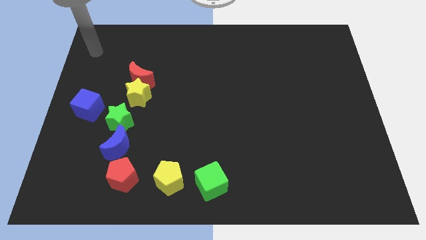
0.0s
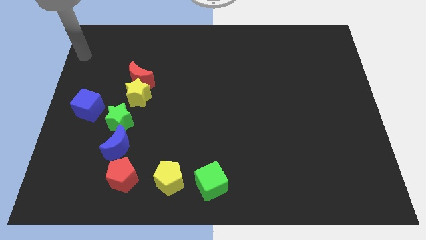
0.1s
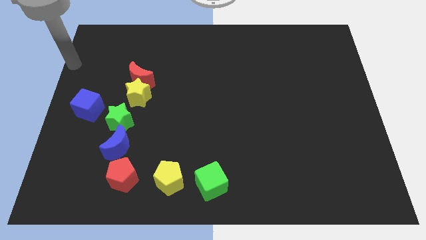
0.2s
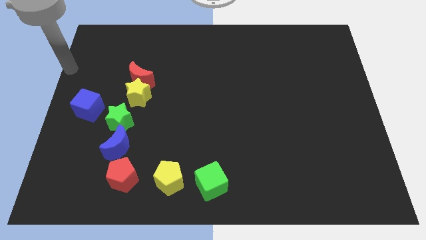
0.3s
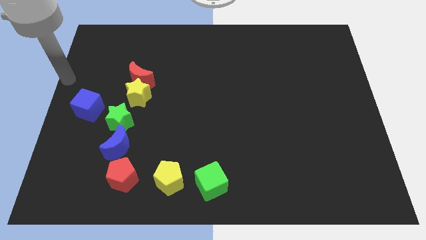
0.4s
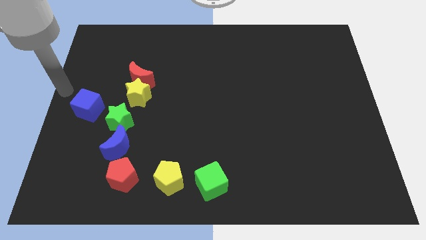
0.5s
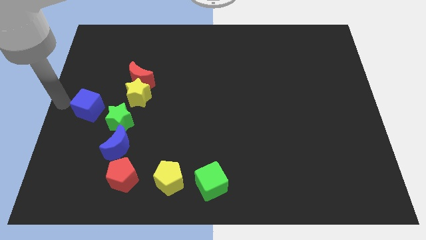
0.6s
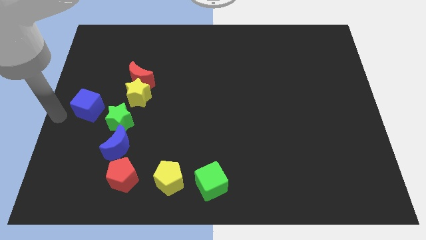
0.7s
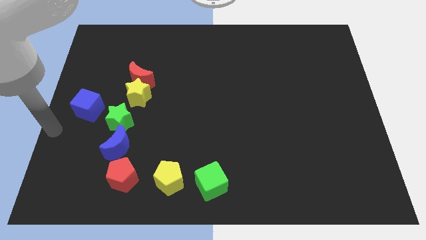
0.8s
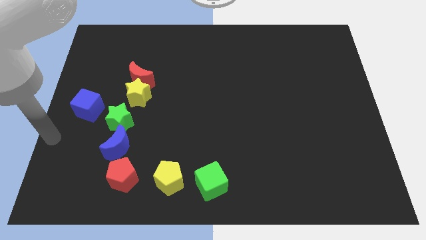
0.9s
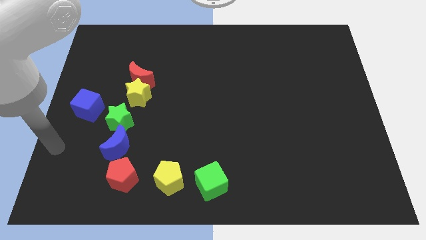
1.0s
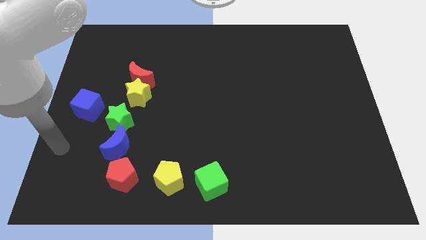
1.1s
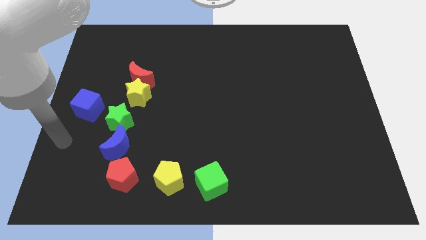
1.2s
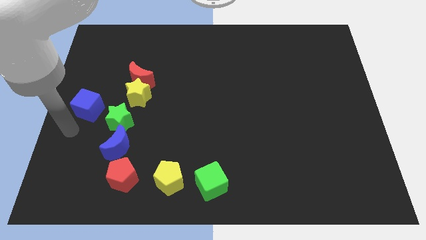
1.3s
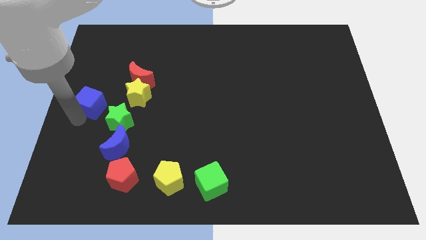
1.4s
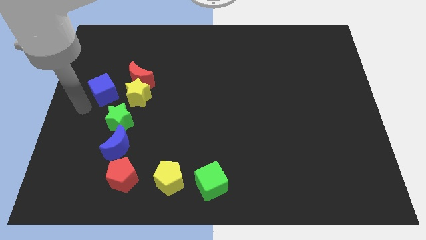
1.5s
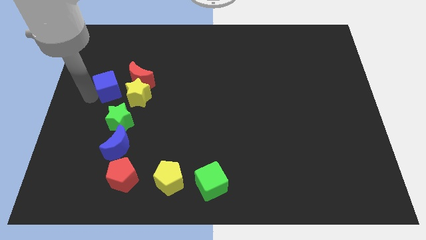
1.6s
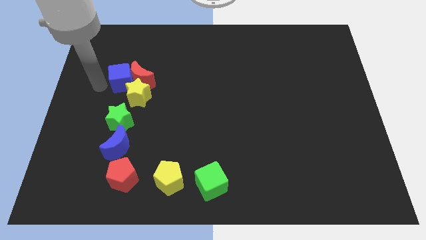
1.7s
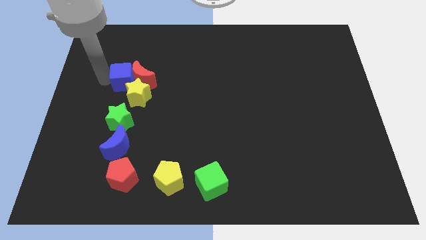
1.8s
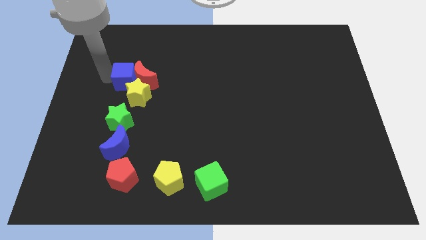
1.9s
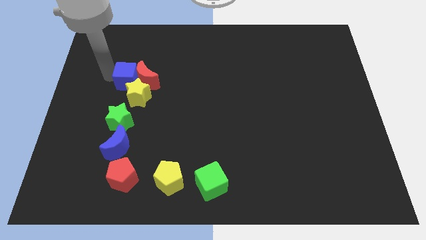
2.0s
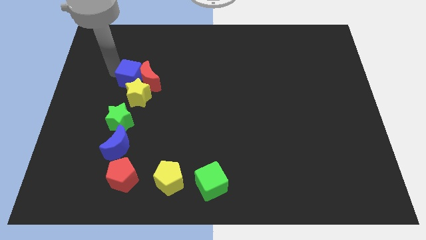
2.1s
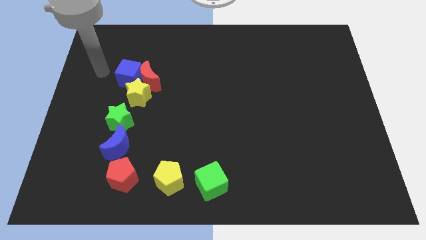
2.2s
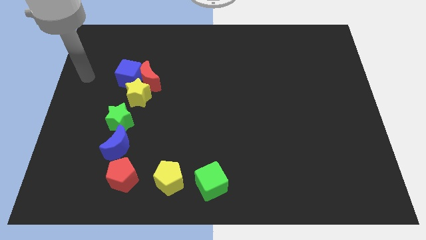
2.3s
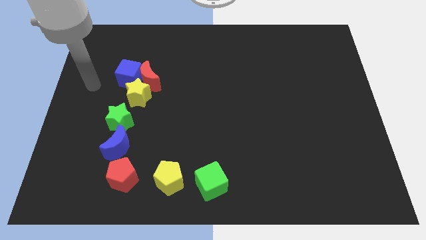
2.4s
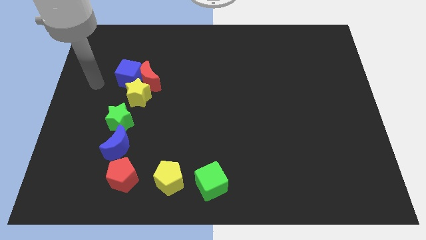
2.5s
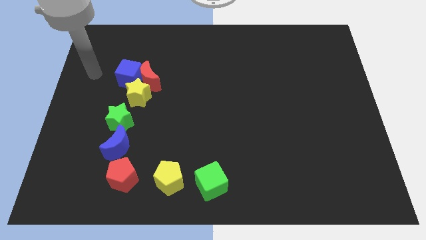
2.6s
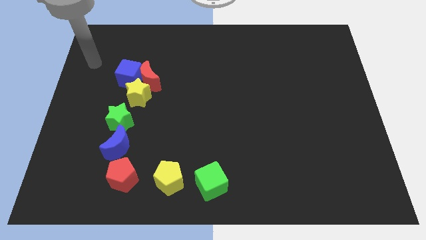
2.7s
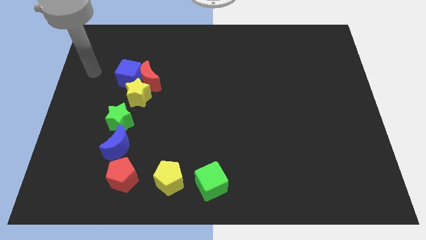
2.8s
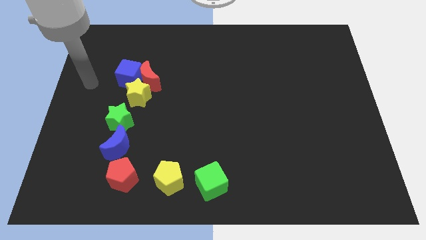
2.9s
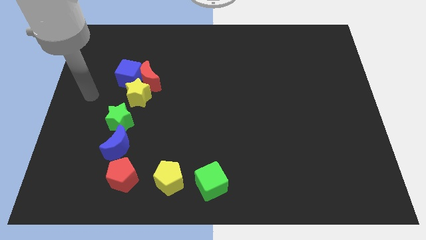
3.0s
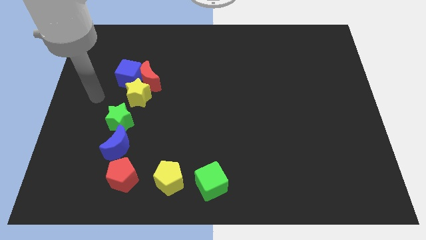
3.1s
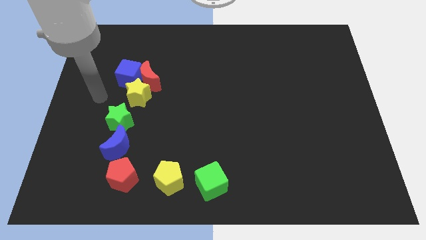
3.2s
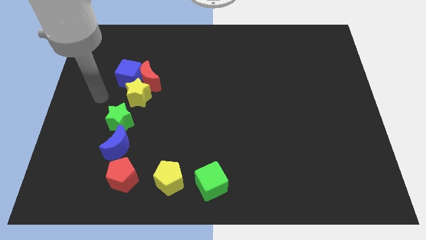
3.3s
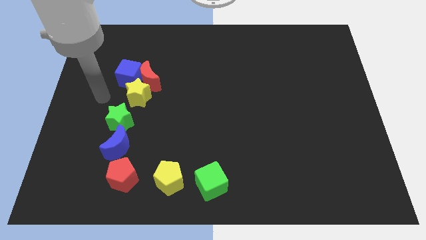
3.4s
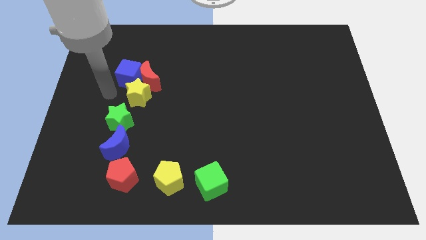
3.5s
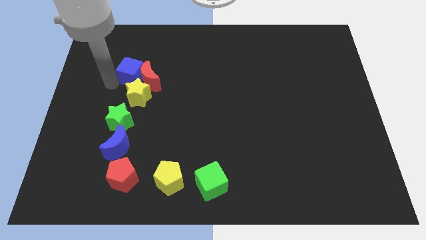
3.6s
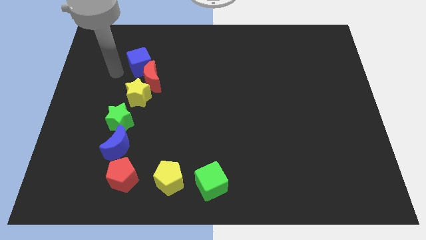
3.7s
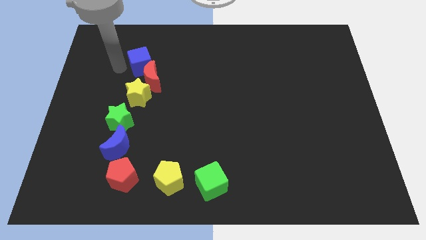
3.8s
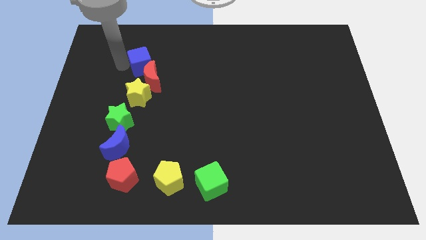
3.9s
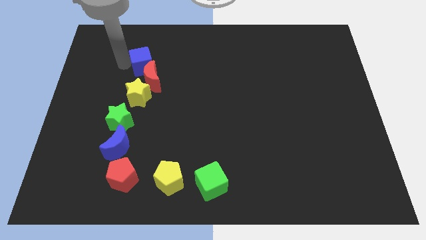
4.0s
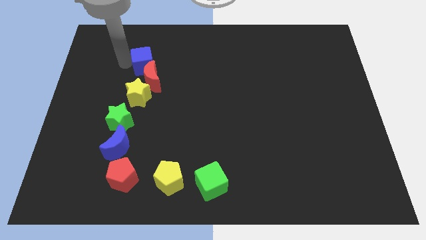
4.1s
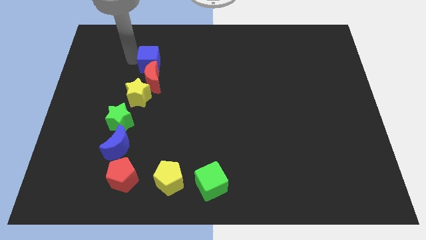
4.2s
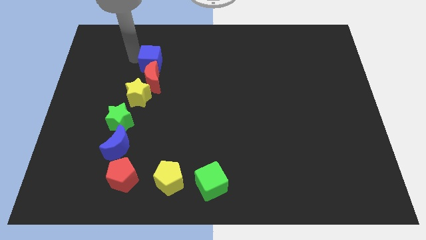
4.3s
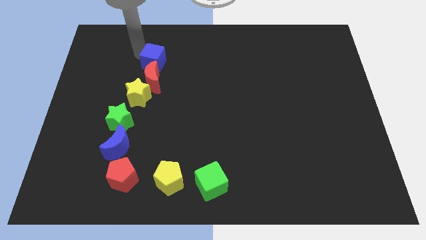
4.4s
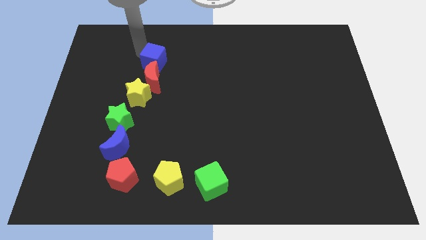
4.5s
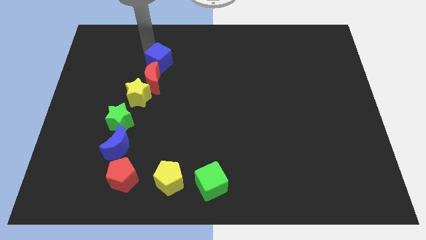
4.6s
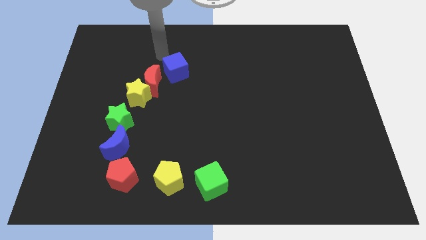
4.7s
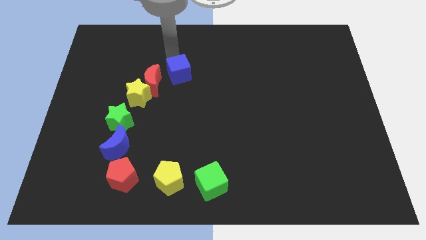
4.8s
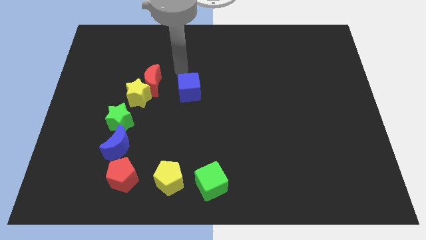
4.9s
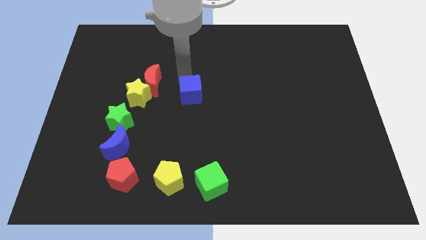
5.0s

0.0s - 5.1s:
place te blue cube to the right of red moon

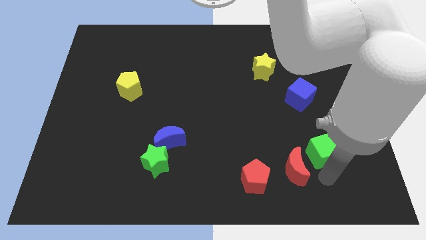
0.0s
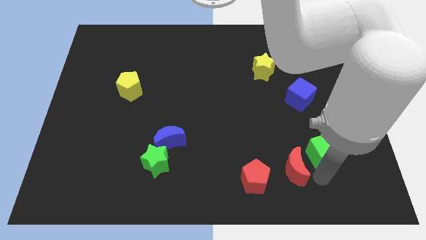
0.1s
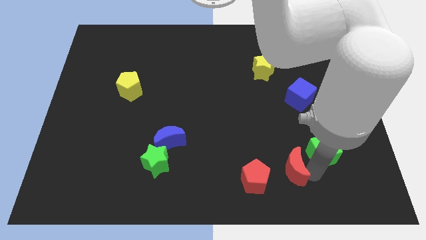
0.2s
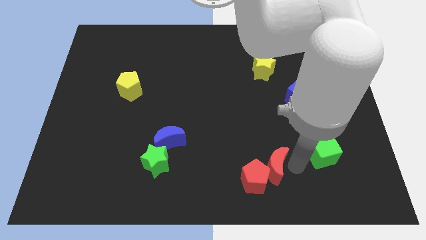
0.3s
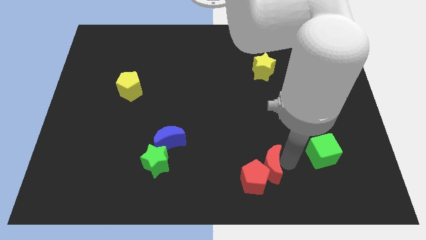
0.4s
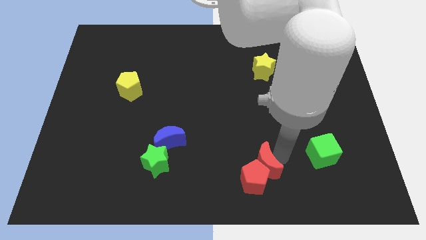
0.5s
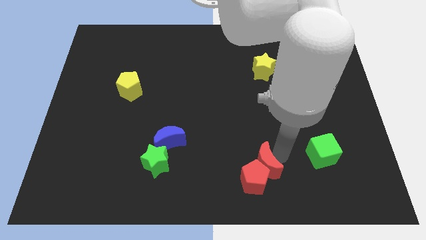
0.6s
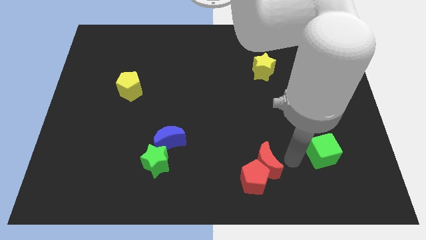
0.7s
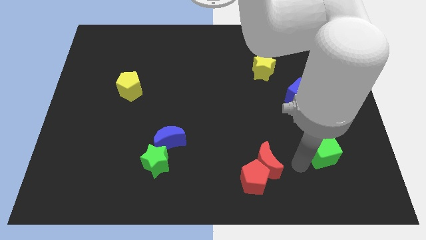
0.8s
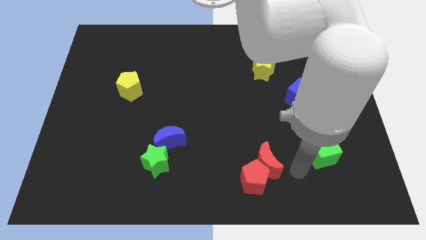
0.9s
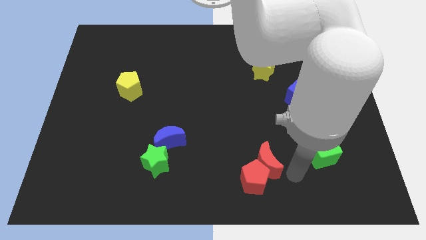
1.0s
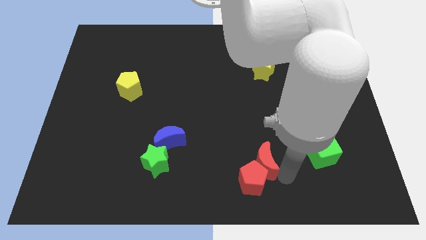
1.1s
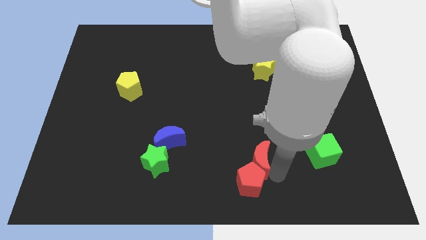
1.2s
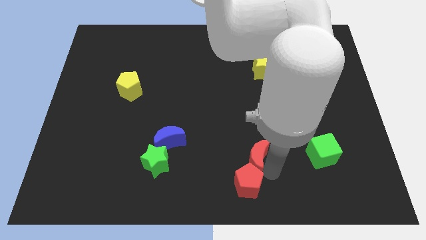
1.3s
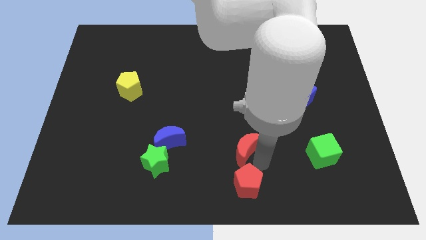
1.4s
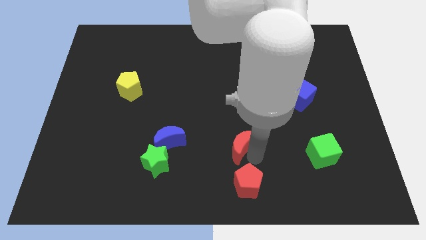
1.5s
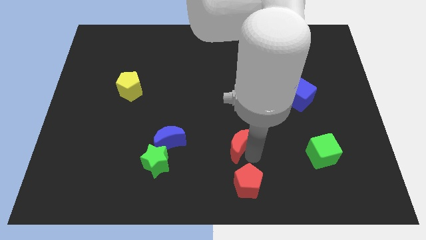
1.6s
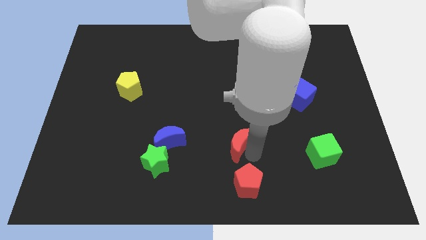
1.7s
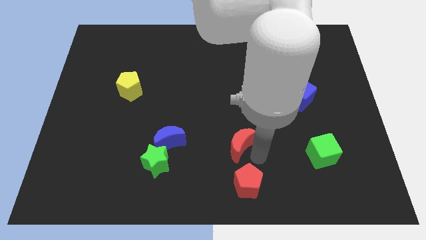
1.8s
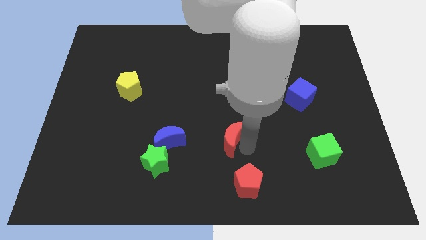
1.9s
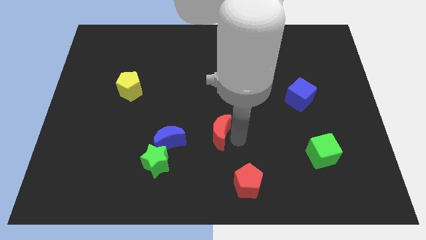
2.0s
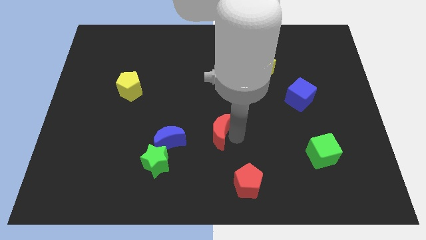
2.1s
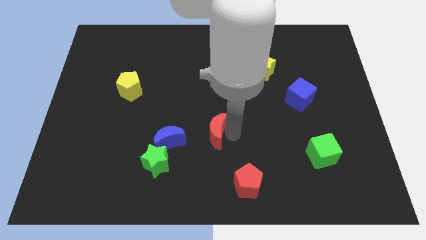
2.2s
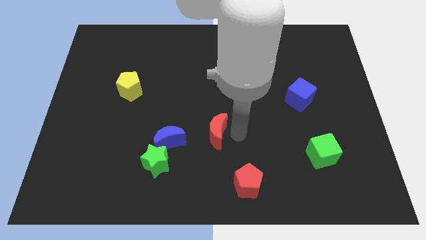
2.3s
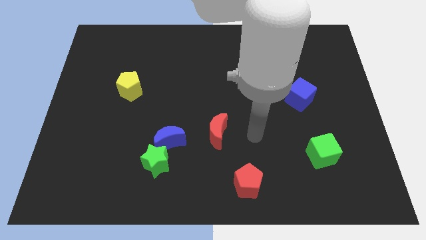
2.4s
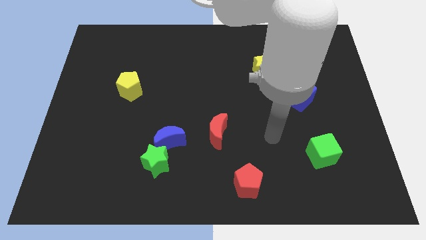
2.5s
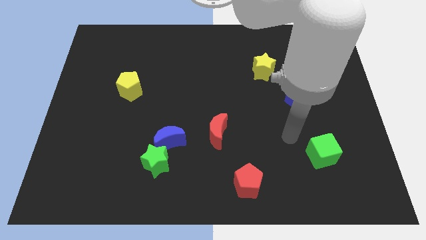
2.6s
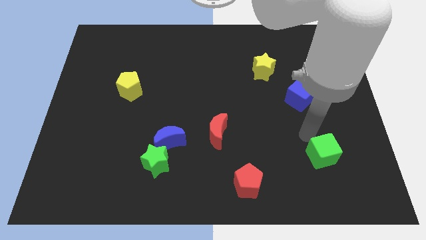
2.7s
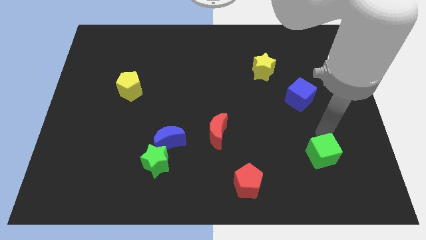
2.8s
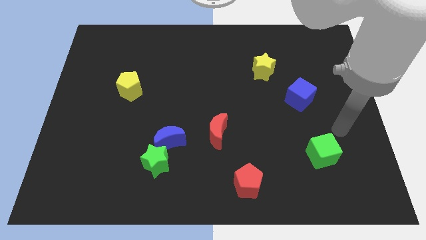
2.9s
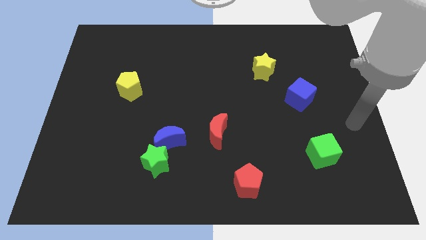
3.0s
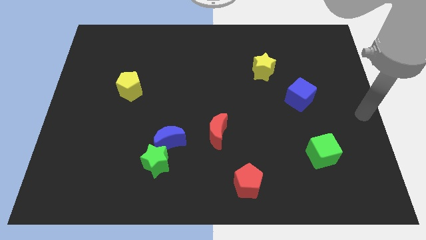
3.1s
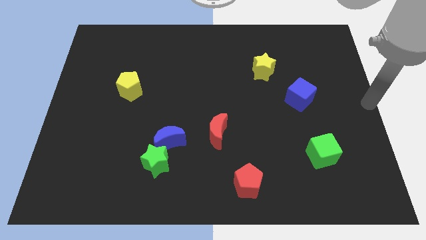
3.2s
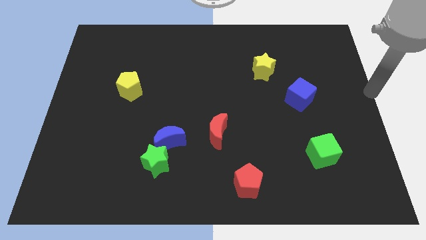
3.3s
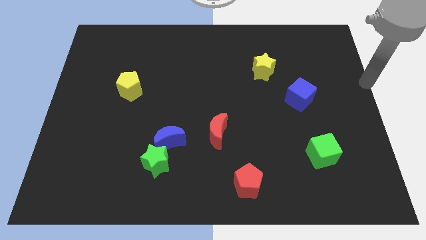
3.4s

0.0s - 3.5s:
move the red crescent to the right side of the blue crescent

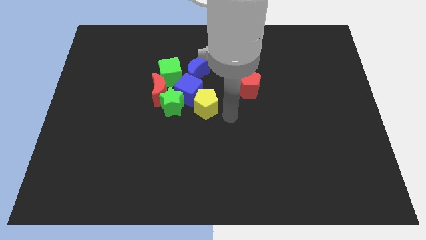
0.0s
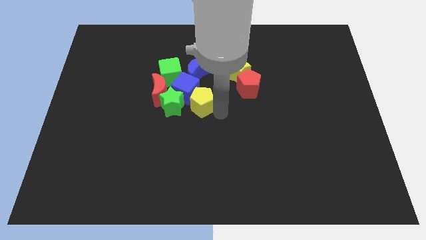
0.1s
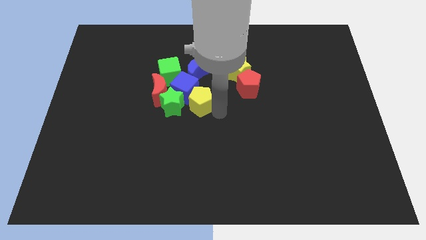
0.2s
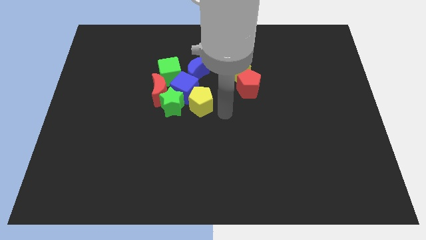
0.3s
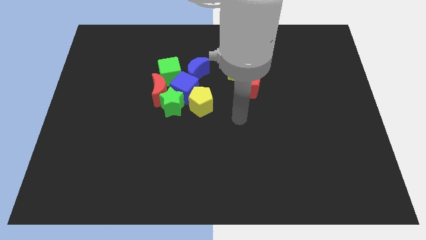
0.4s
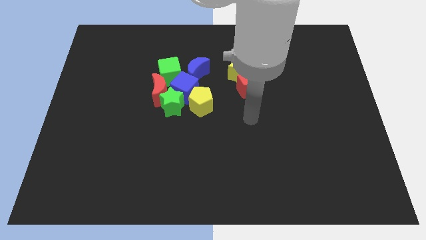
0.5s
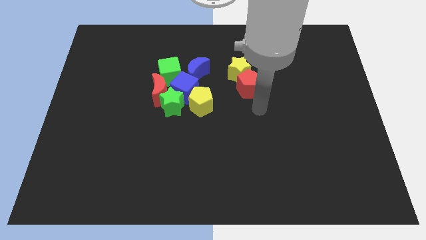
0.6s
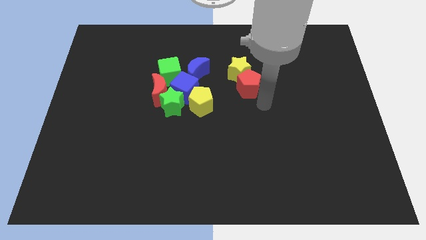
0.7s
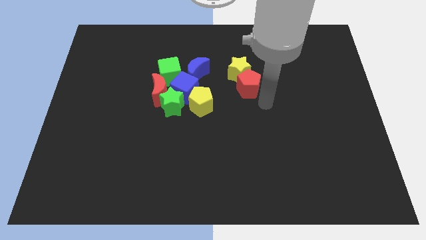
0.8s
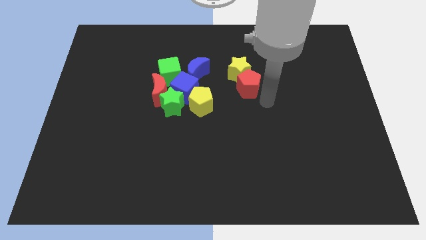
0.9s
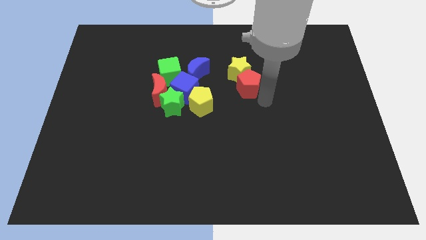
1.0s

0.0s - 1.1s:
move your arm close to the red pentagon
